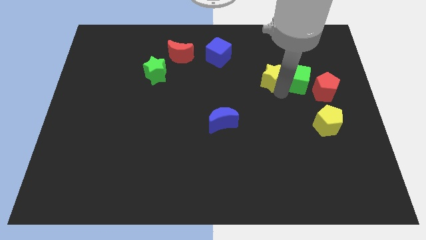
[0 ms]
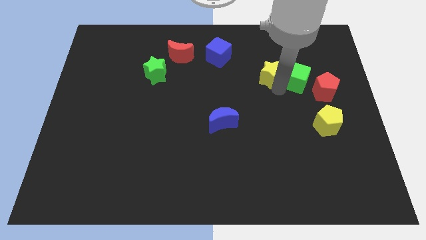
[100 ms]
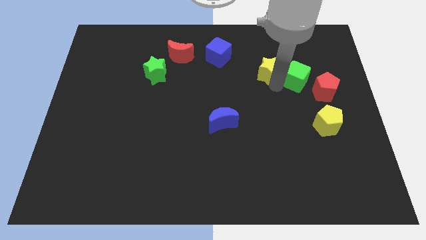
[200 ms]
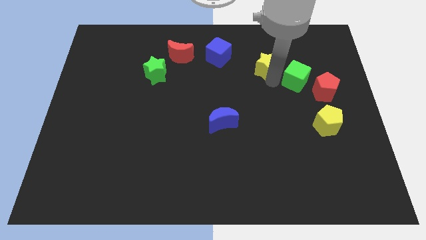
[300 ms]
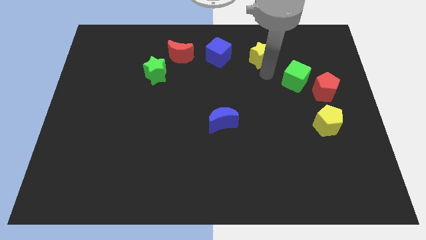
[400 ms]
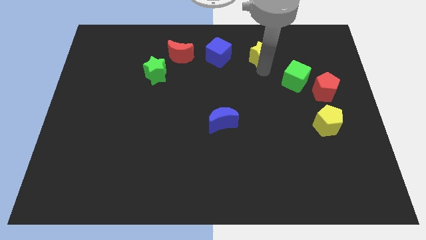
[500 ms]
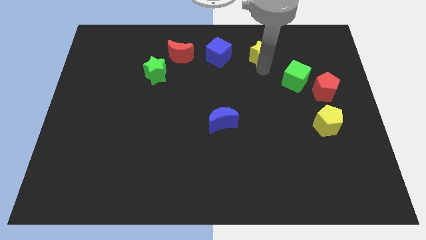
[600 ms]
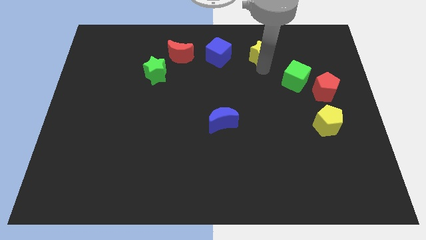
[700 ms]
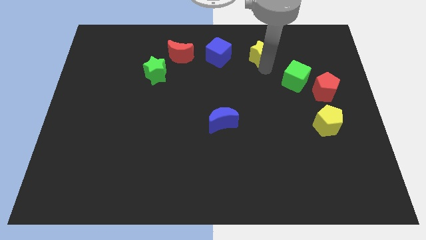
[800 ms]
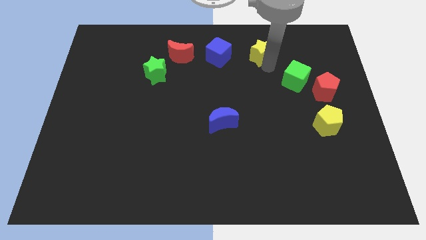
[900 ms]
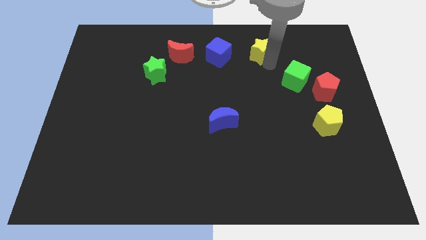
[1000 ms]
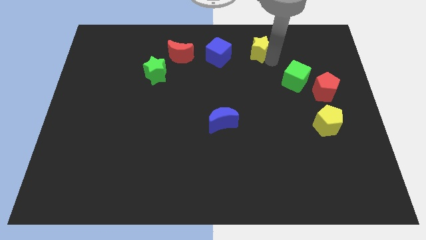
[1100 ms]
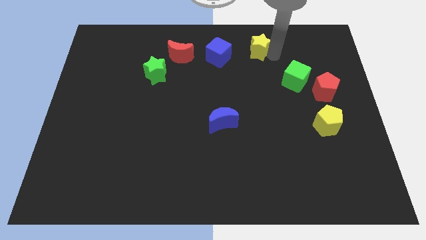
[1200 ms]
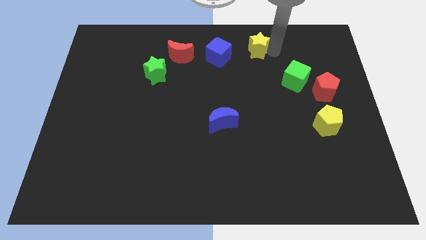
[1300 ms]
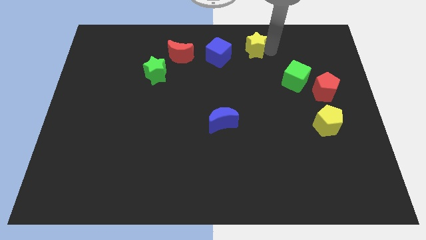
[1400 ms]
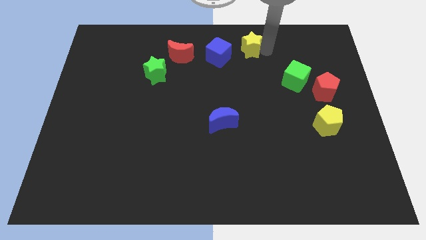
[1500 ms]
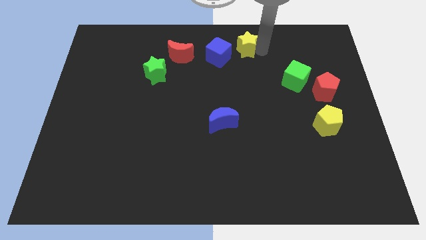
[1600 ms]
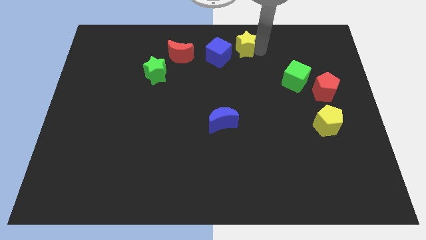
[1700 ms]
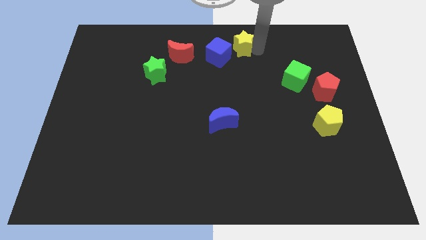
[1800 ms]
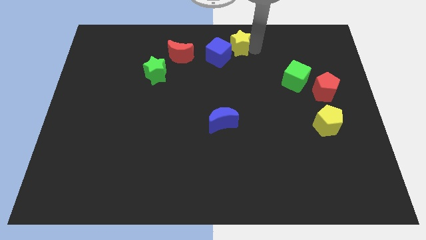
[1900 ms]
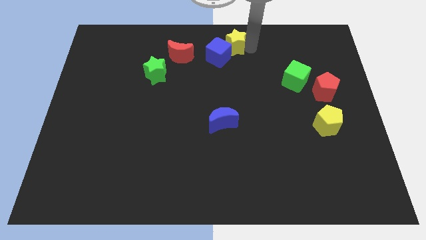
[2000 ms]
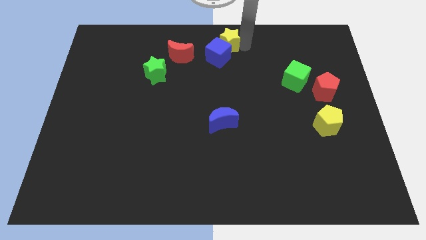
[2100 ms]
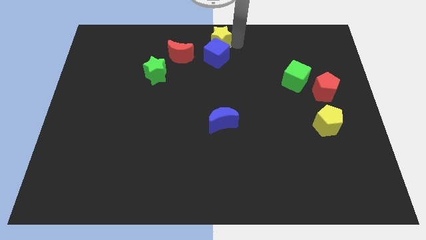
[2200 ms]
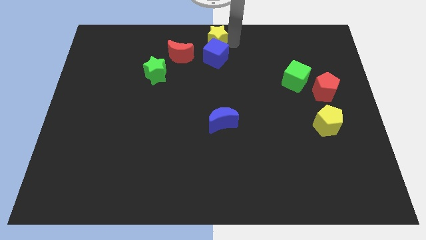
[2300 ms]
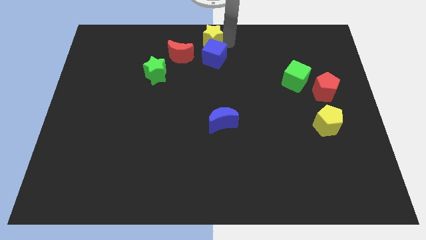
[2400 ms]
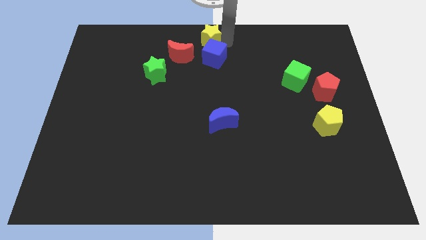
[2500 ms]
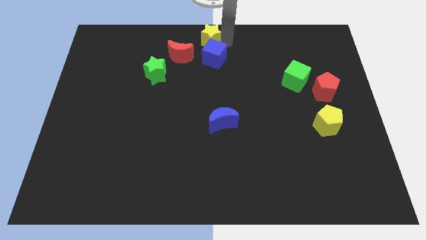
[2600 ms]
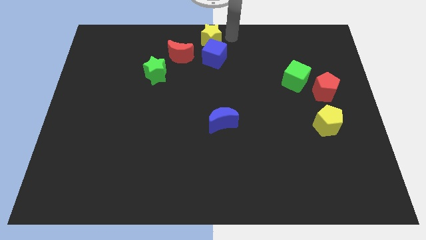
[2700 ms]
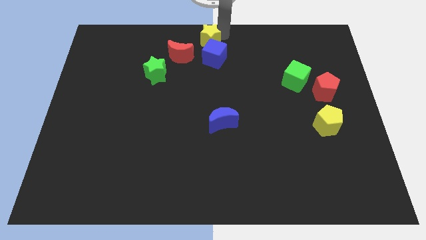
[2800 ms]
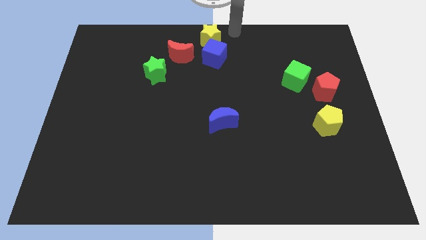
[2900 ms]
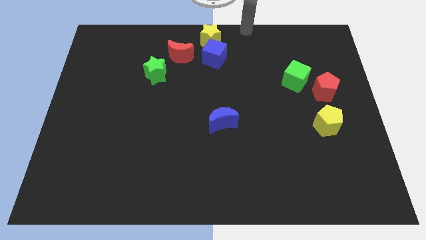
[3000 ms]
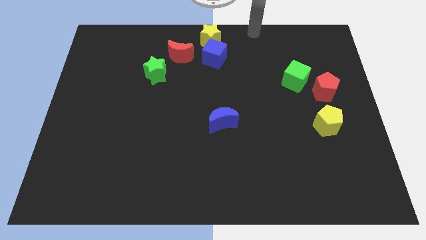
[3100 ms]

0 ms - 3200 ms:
place the yellow star to the top center of board

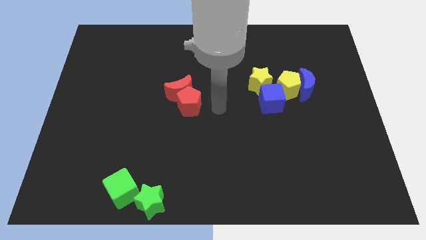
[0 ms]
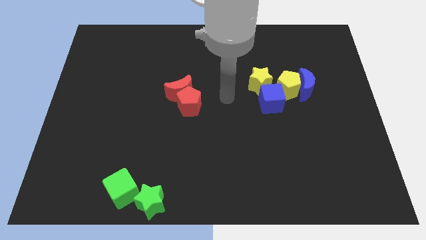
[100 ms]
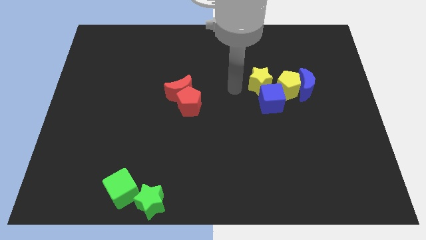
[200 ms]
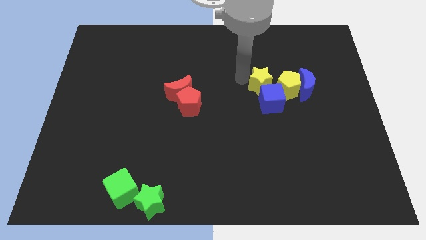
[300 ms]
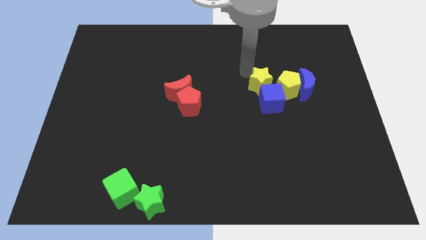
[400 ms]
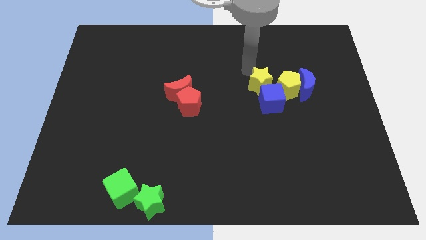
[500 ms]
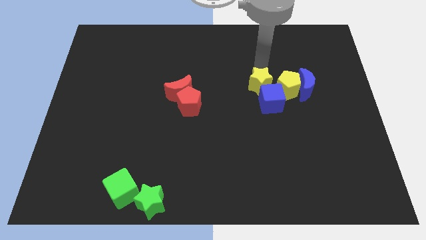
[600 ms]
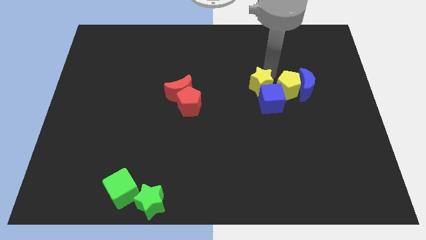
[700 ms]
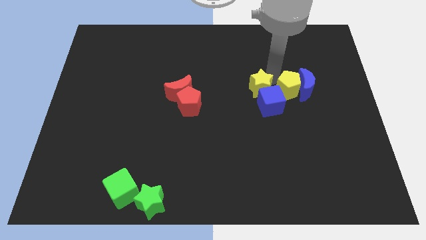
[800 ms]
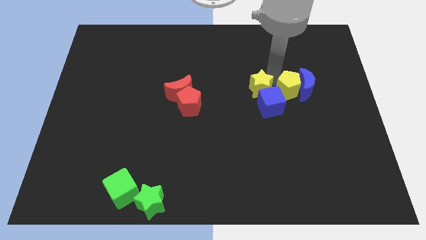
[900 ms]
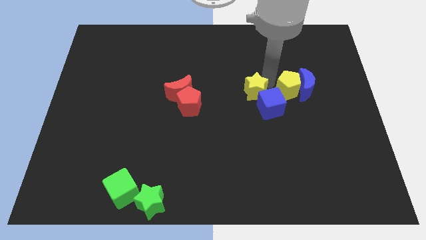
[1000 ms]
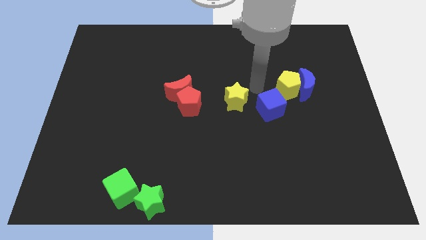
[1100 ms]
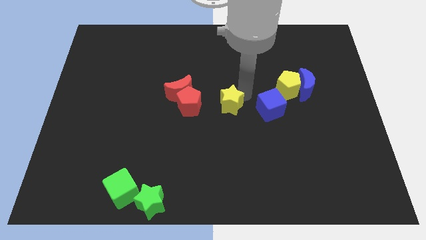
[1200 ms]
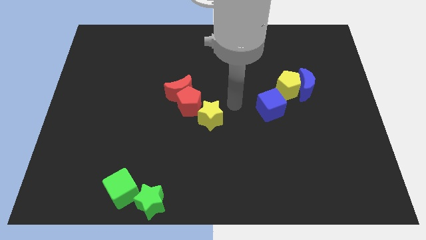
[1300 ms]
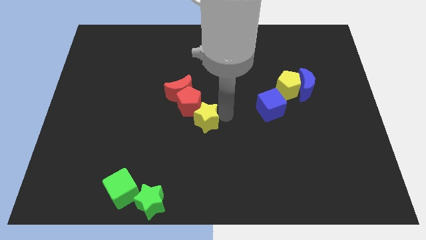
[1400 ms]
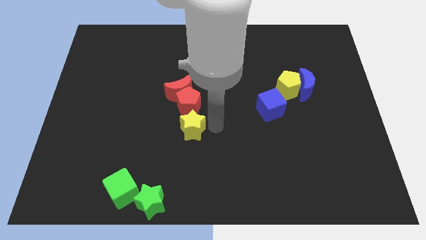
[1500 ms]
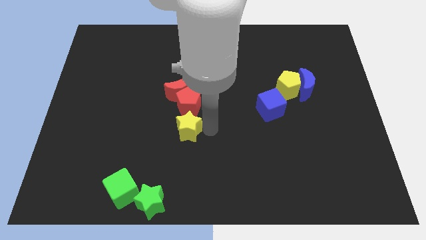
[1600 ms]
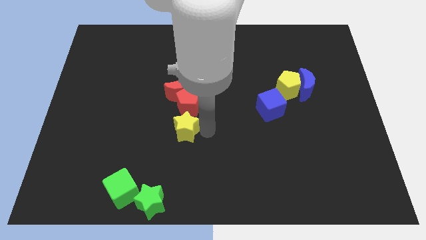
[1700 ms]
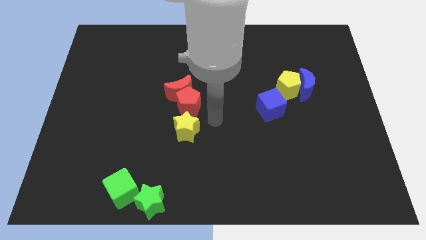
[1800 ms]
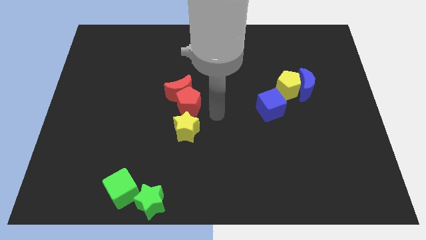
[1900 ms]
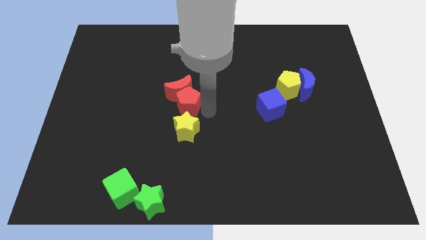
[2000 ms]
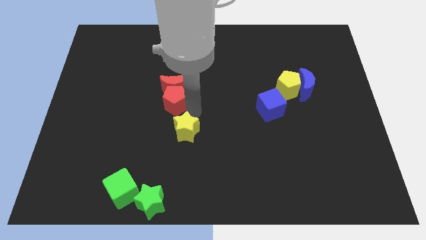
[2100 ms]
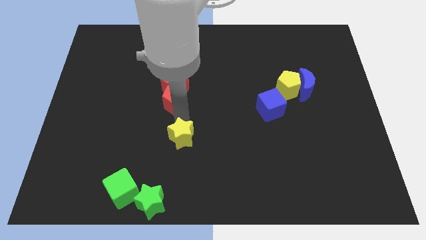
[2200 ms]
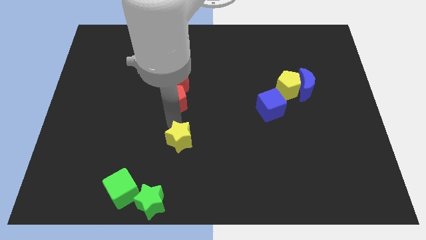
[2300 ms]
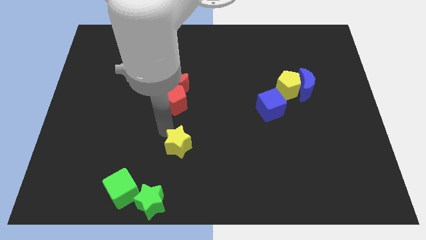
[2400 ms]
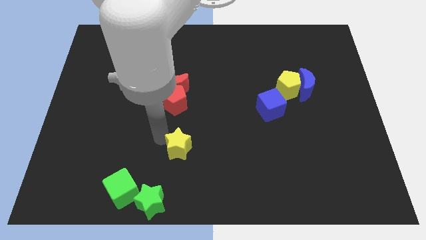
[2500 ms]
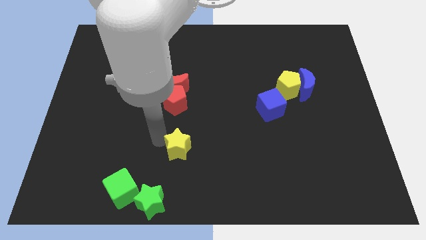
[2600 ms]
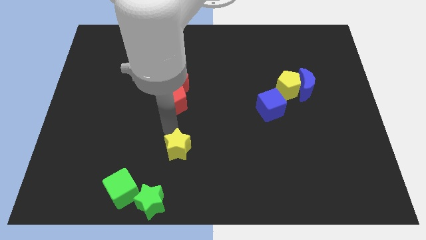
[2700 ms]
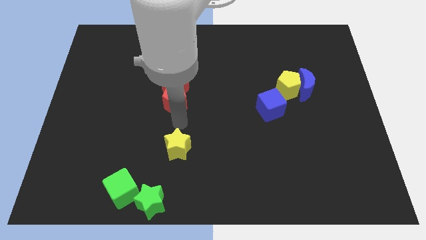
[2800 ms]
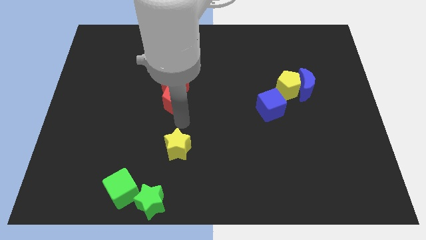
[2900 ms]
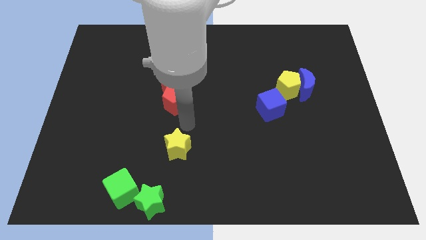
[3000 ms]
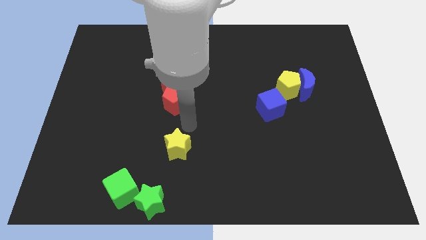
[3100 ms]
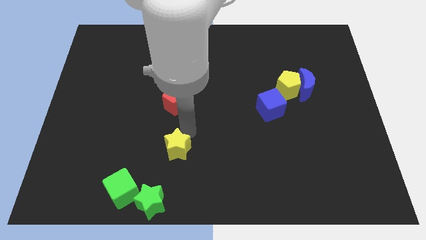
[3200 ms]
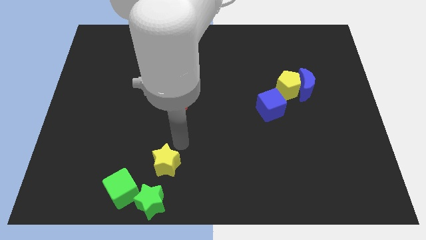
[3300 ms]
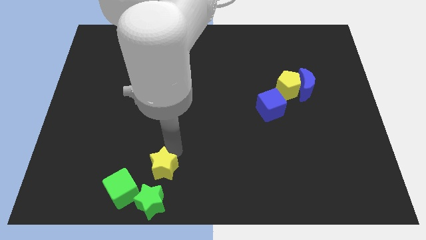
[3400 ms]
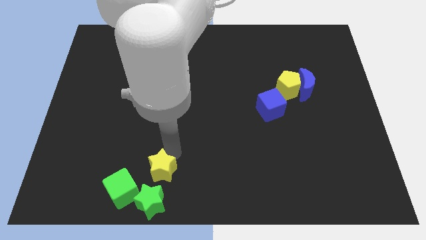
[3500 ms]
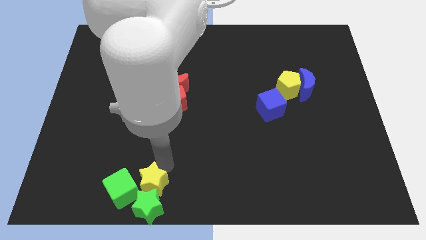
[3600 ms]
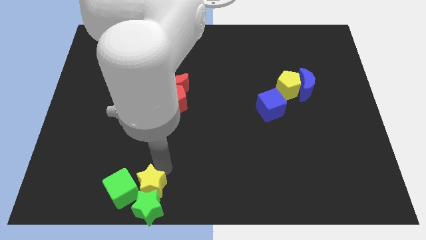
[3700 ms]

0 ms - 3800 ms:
move the yellow star into the top side of the green star

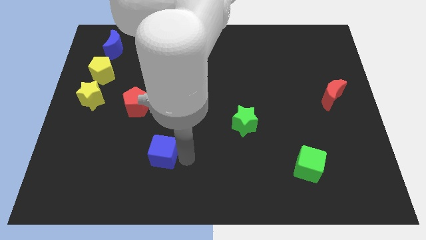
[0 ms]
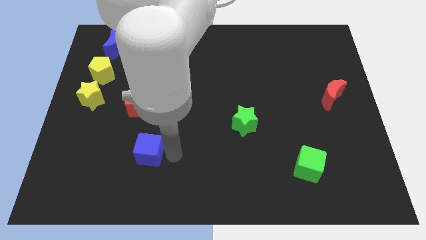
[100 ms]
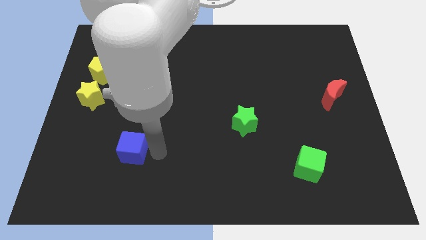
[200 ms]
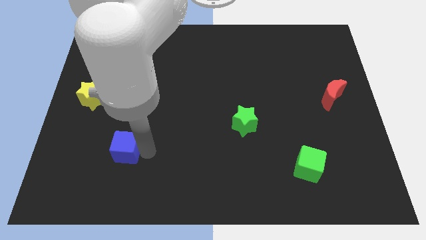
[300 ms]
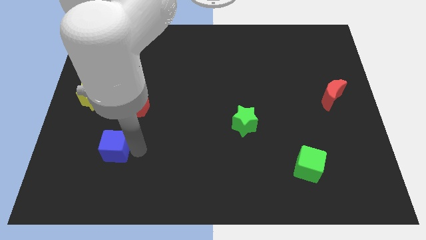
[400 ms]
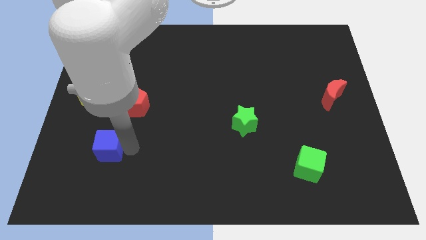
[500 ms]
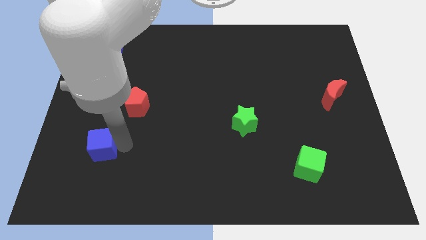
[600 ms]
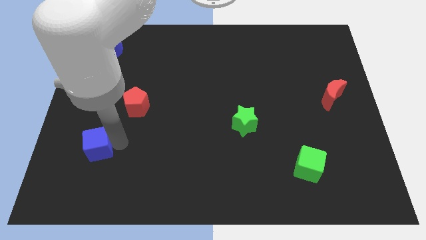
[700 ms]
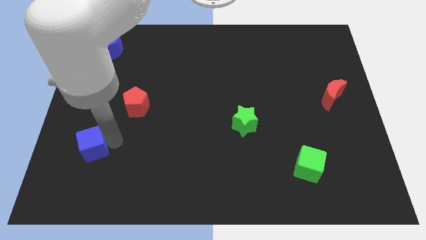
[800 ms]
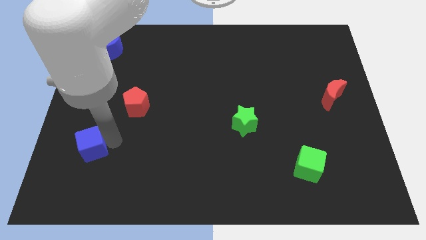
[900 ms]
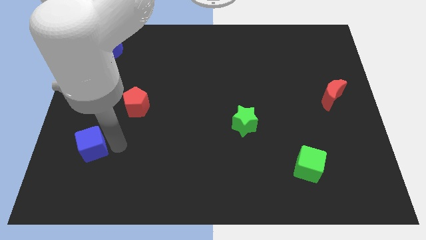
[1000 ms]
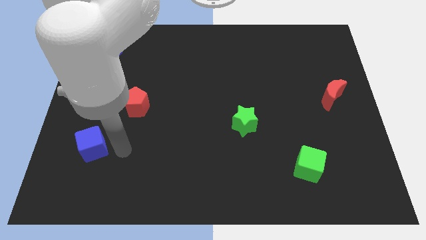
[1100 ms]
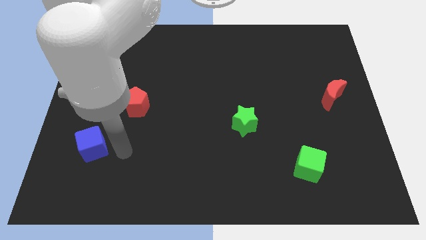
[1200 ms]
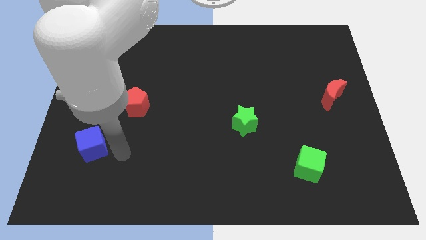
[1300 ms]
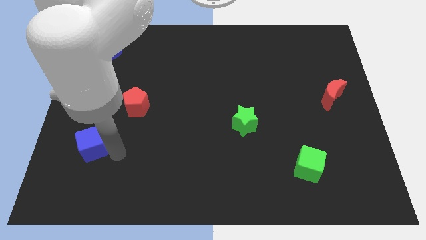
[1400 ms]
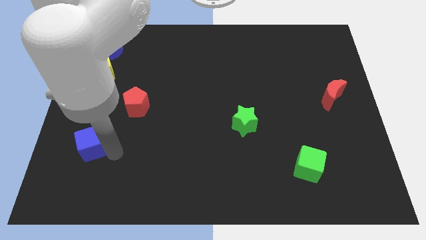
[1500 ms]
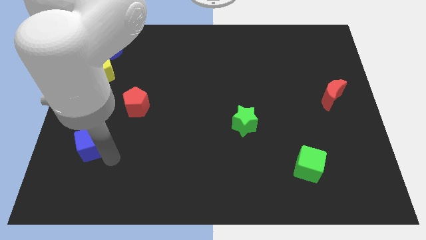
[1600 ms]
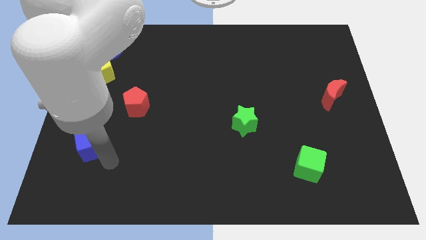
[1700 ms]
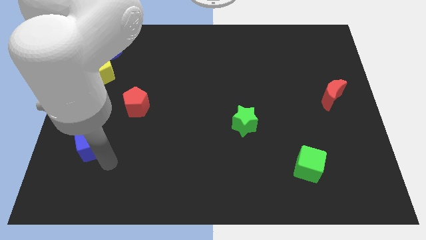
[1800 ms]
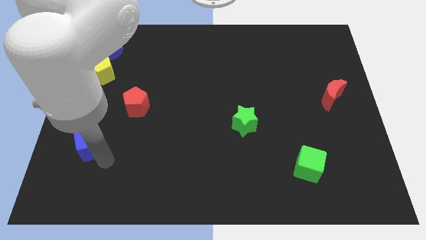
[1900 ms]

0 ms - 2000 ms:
push the blue cube towards the left side of the board

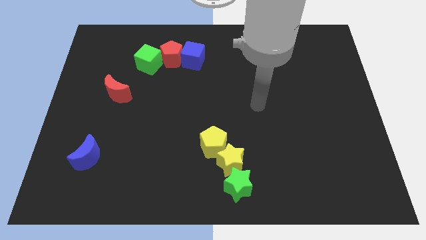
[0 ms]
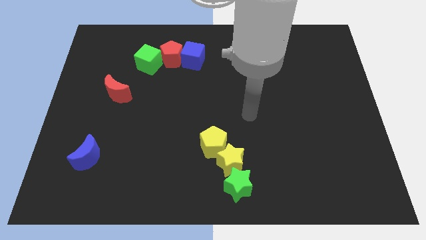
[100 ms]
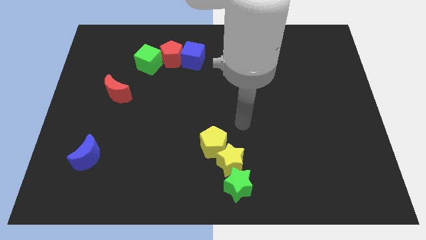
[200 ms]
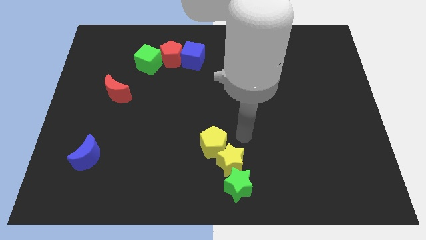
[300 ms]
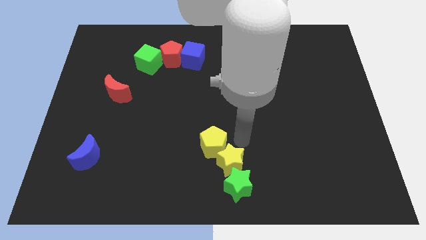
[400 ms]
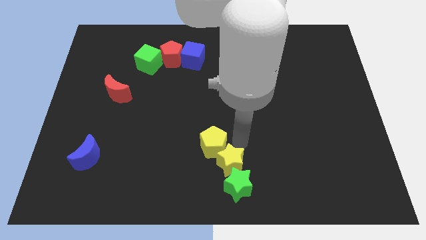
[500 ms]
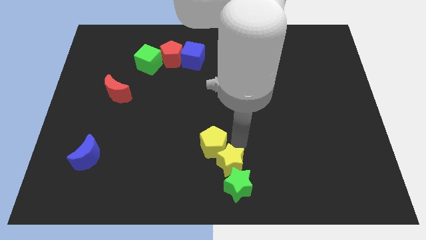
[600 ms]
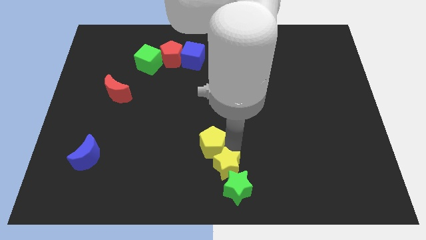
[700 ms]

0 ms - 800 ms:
tap the top right of the yellow star
